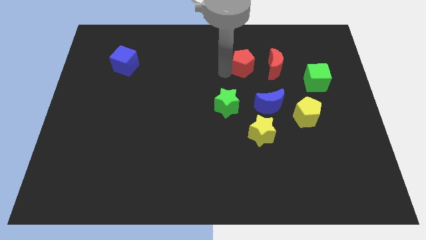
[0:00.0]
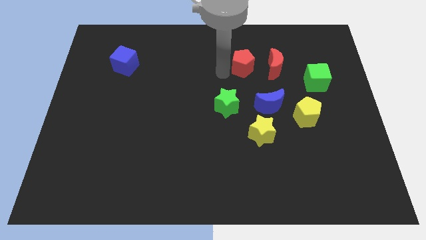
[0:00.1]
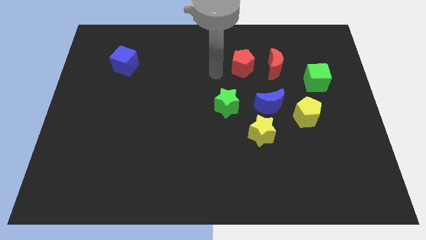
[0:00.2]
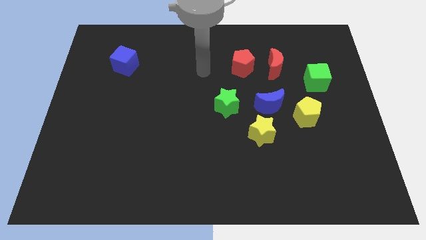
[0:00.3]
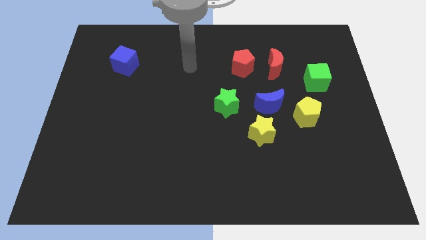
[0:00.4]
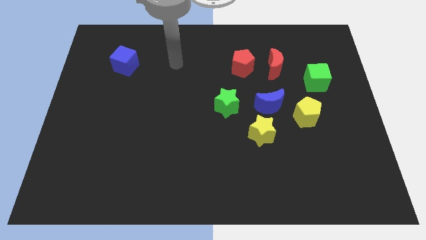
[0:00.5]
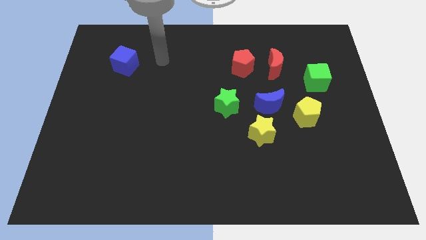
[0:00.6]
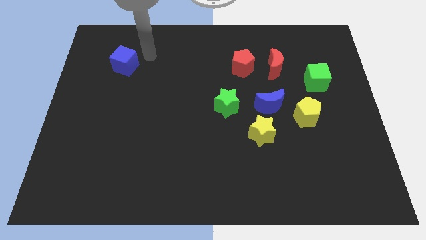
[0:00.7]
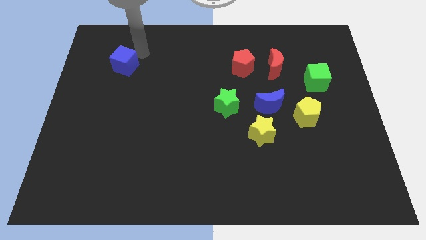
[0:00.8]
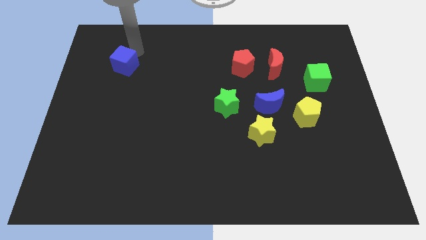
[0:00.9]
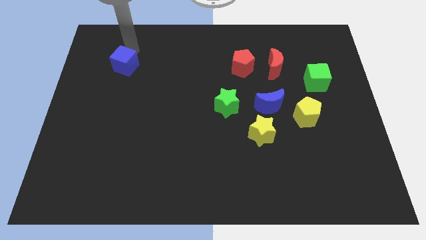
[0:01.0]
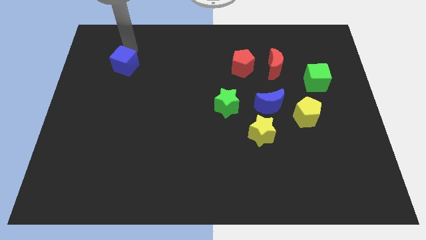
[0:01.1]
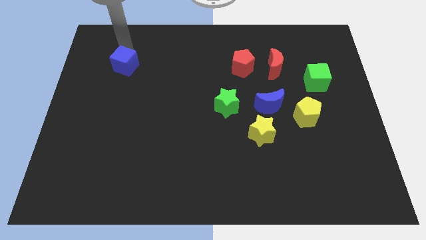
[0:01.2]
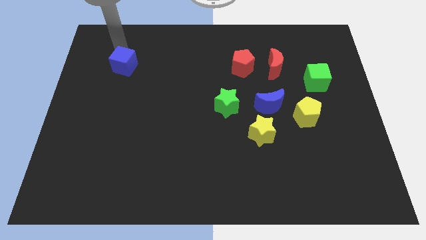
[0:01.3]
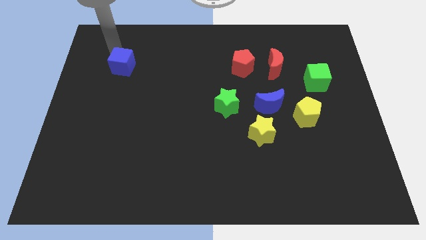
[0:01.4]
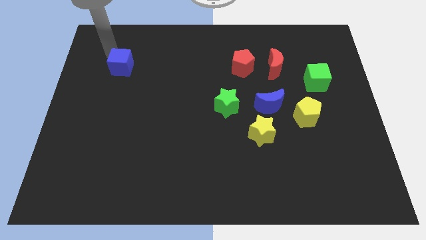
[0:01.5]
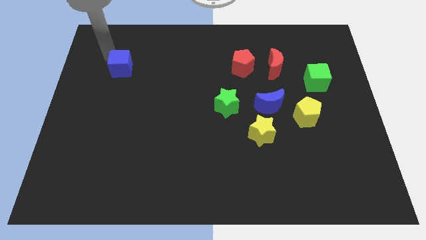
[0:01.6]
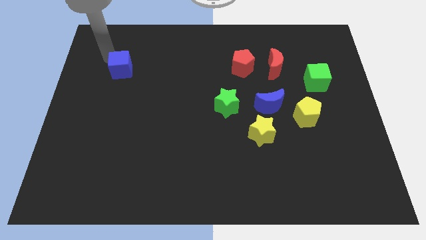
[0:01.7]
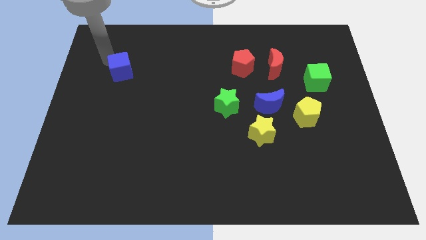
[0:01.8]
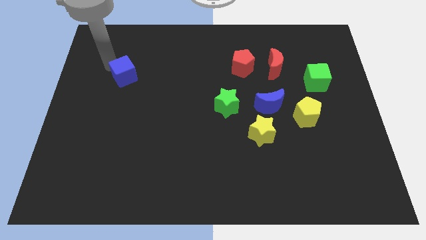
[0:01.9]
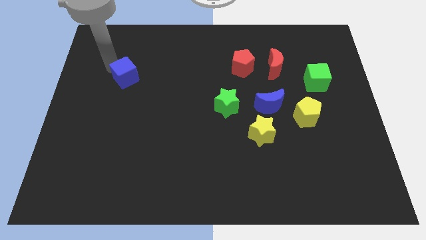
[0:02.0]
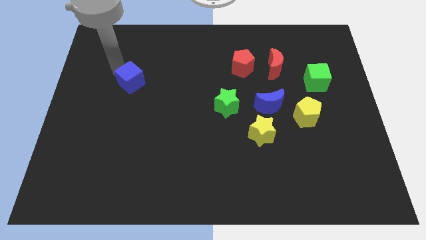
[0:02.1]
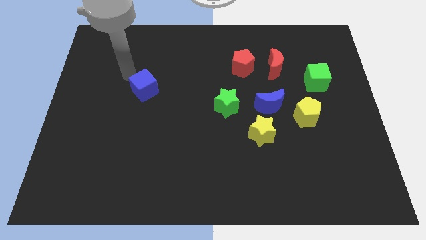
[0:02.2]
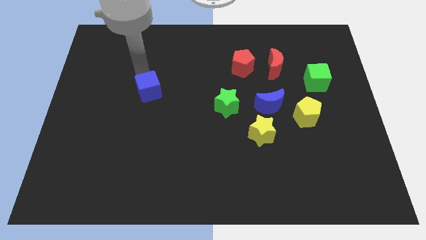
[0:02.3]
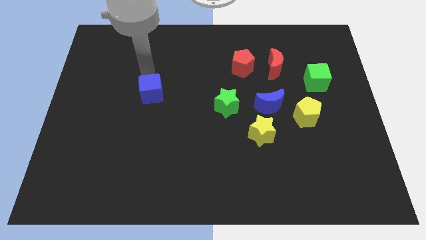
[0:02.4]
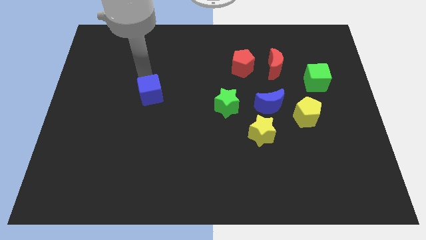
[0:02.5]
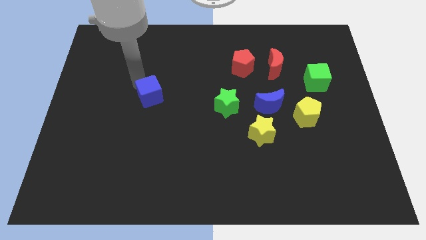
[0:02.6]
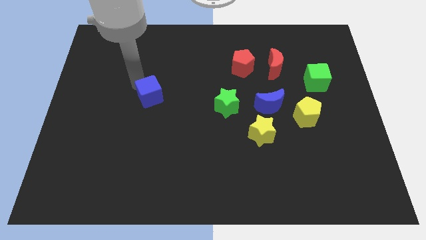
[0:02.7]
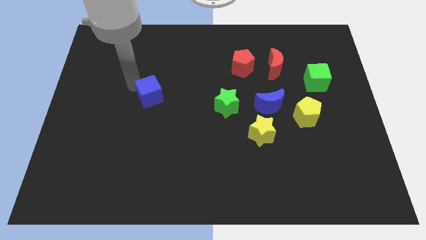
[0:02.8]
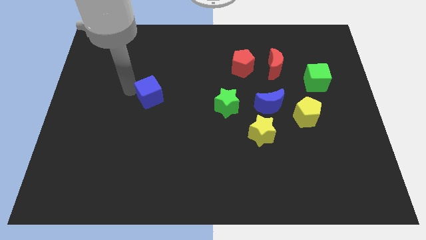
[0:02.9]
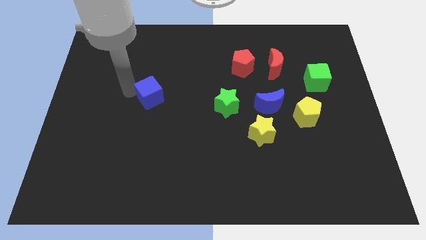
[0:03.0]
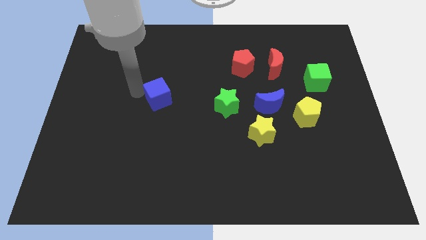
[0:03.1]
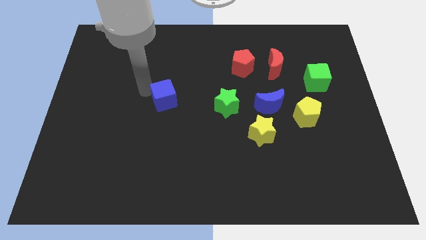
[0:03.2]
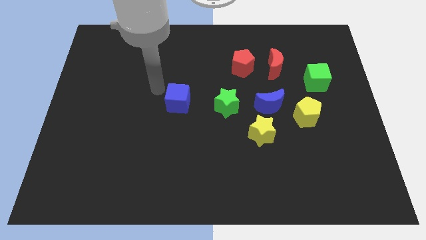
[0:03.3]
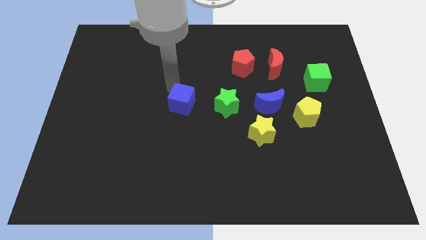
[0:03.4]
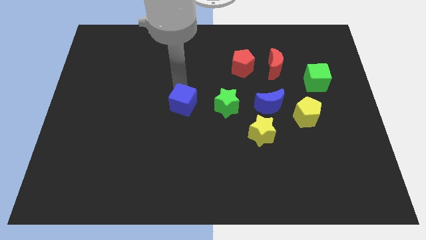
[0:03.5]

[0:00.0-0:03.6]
push blue cube beside green star

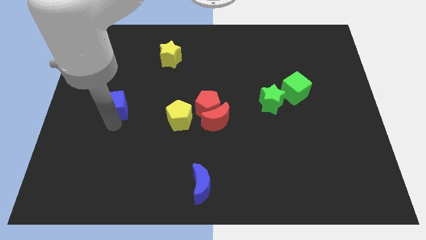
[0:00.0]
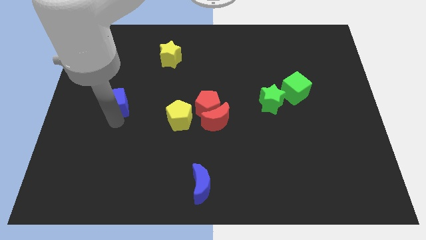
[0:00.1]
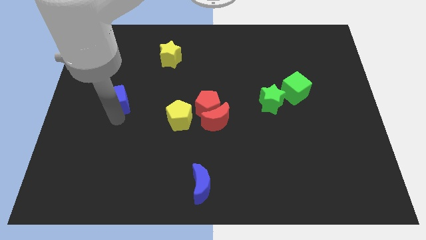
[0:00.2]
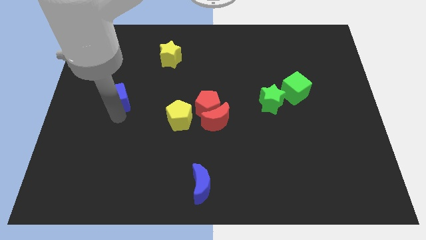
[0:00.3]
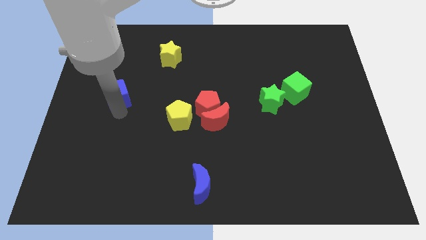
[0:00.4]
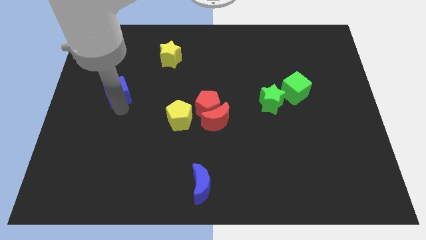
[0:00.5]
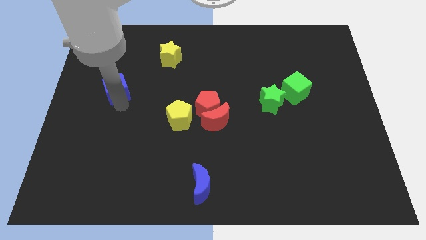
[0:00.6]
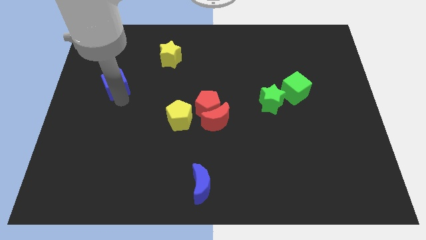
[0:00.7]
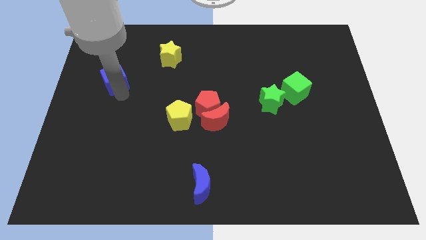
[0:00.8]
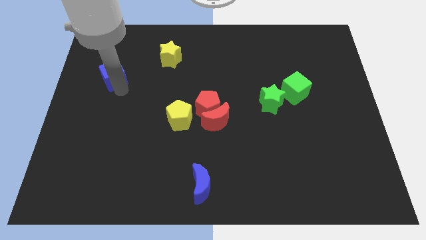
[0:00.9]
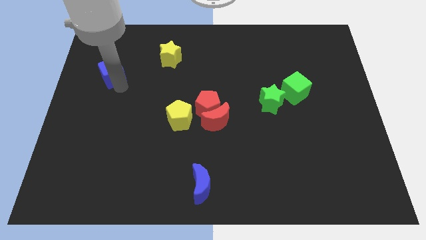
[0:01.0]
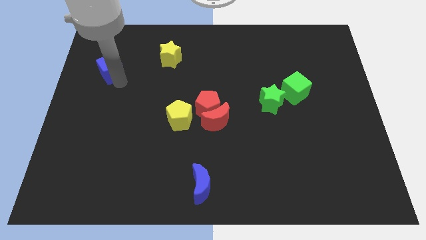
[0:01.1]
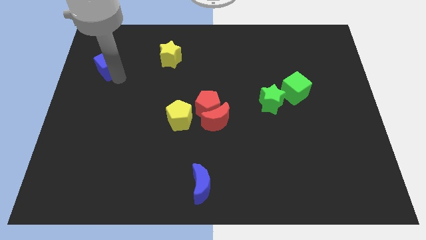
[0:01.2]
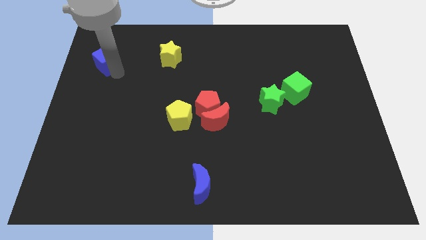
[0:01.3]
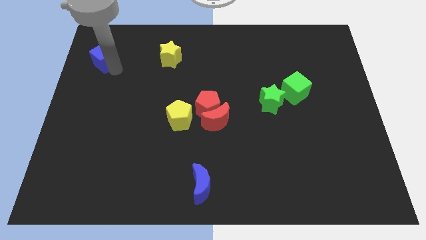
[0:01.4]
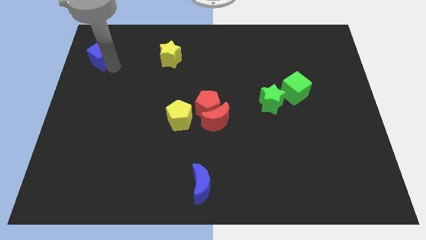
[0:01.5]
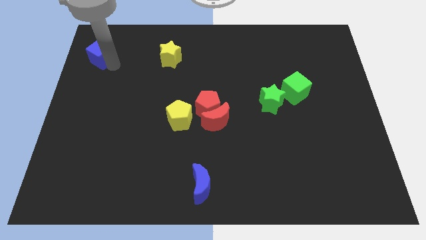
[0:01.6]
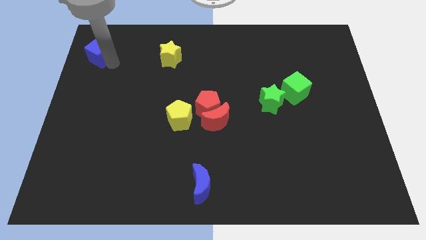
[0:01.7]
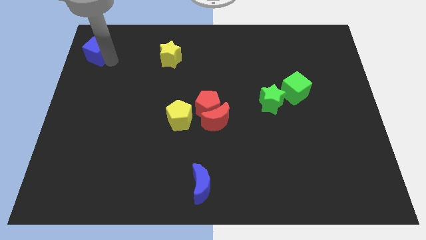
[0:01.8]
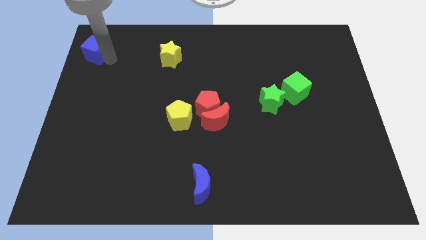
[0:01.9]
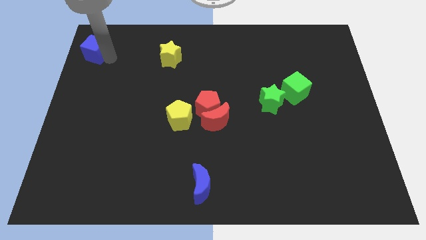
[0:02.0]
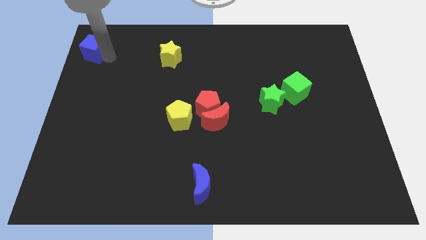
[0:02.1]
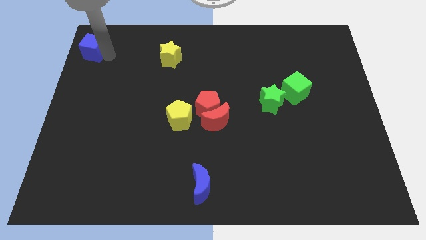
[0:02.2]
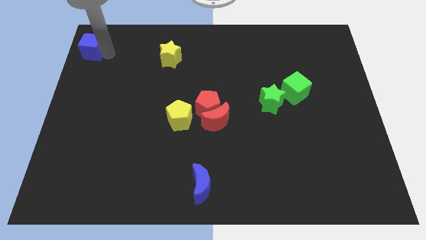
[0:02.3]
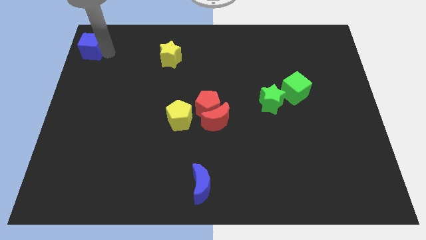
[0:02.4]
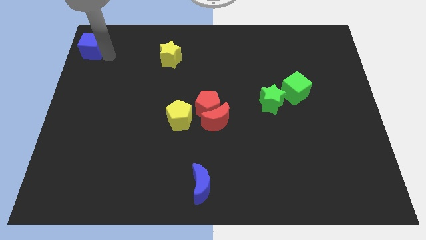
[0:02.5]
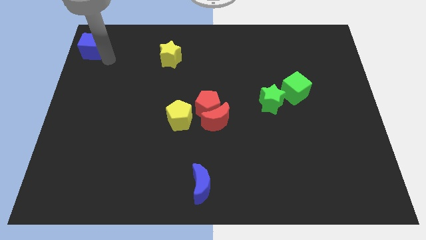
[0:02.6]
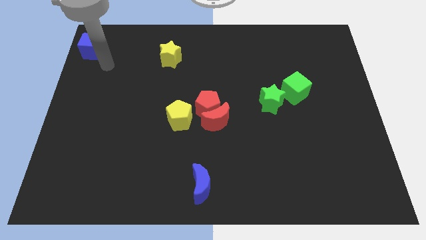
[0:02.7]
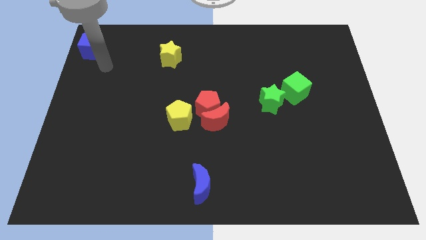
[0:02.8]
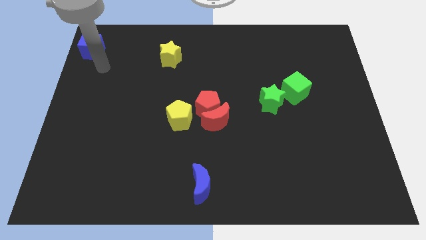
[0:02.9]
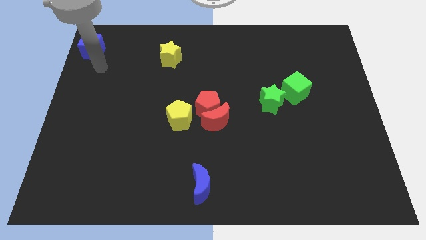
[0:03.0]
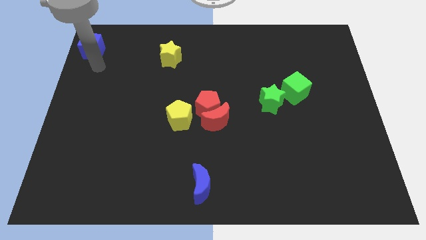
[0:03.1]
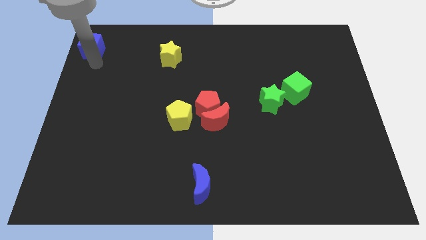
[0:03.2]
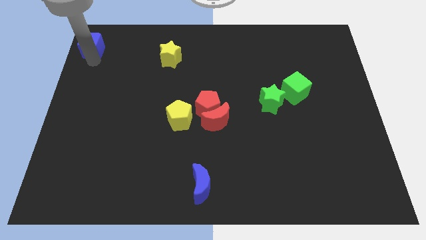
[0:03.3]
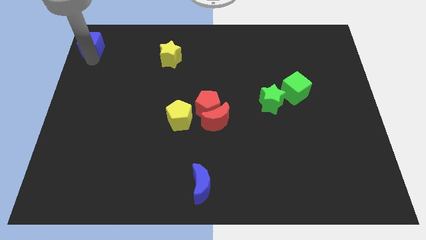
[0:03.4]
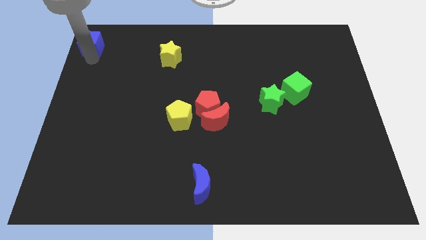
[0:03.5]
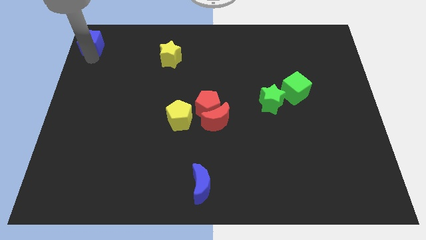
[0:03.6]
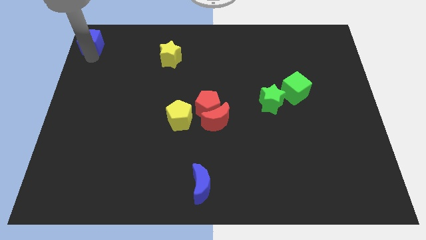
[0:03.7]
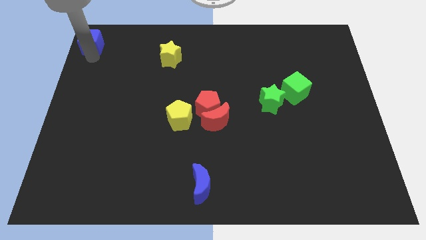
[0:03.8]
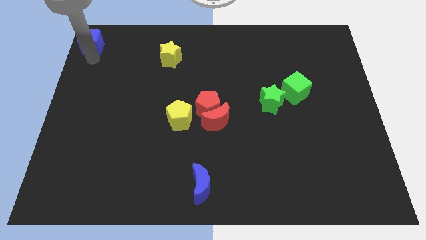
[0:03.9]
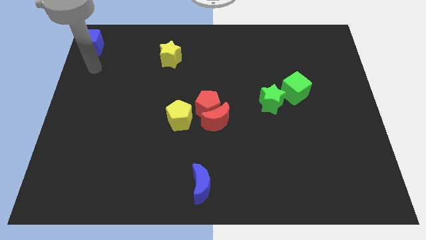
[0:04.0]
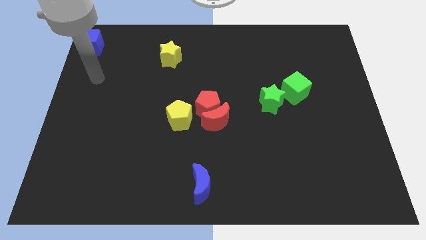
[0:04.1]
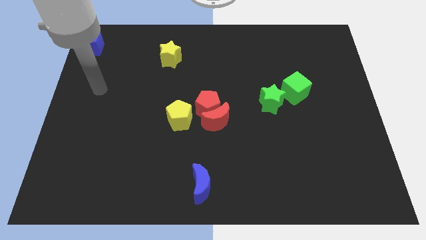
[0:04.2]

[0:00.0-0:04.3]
move the blue cube towards the top left corner of the board

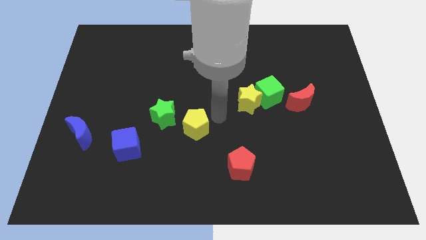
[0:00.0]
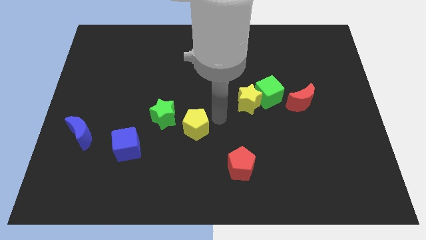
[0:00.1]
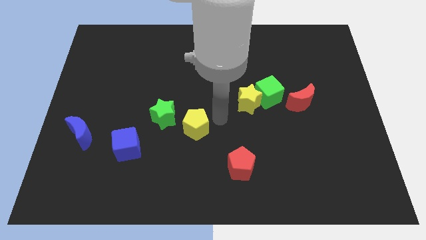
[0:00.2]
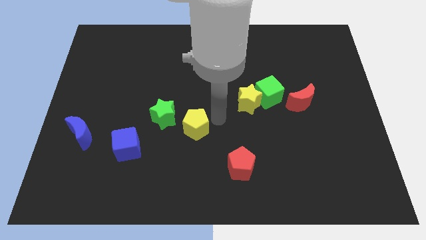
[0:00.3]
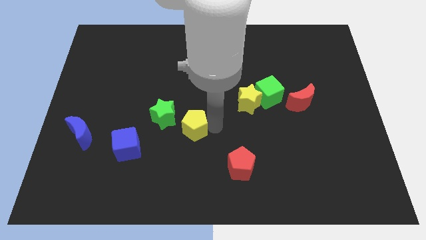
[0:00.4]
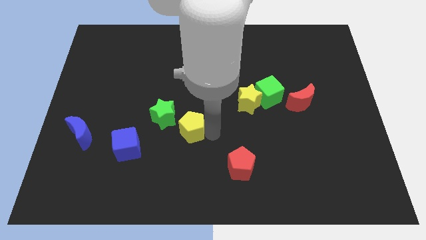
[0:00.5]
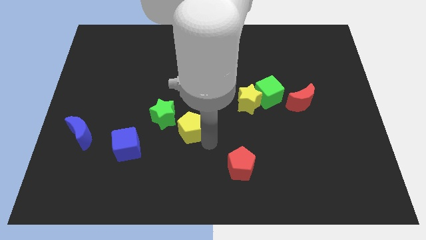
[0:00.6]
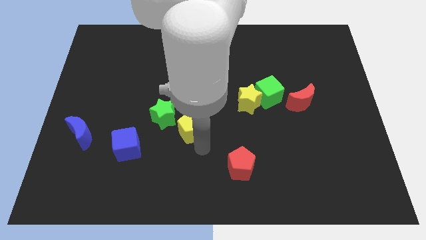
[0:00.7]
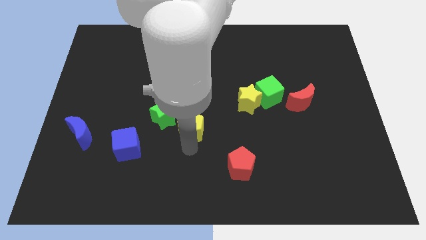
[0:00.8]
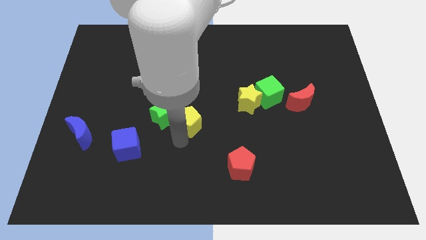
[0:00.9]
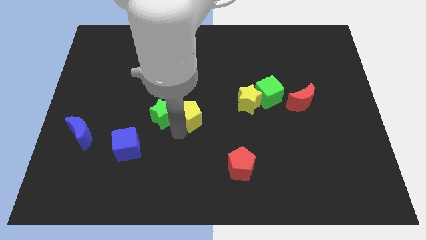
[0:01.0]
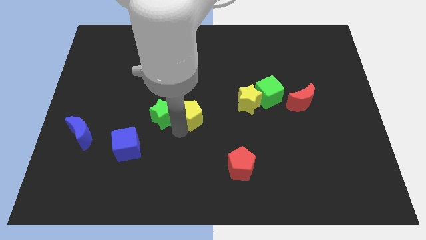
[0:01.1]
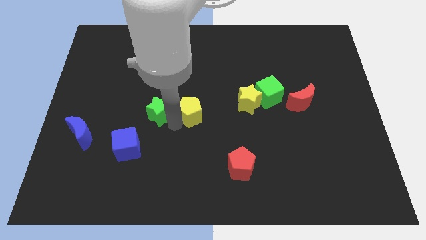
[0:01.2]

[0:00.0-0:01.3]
push the yellow pentagon up slightly
